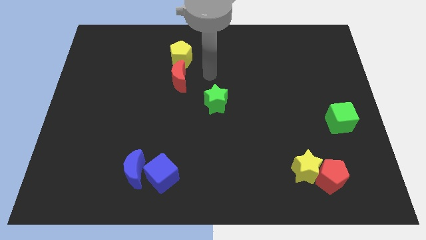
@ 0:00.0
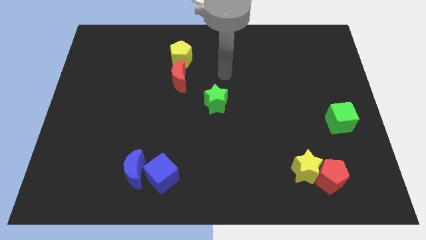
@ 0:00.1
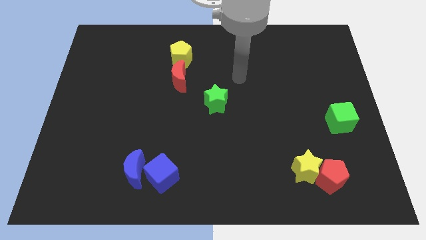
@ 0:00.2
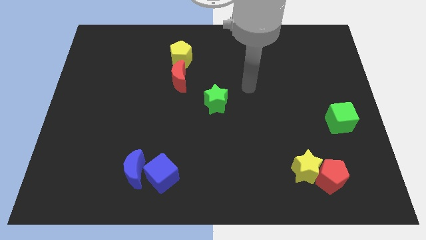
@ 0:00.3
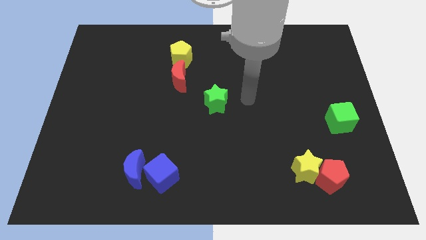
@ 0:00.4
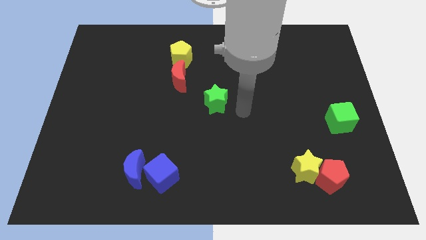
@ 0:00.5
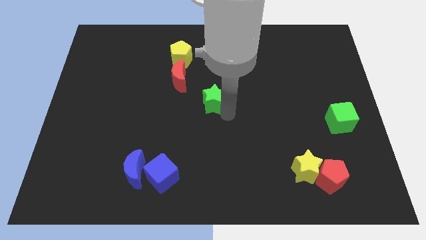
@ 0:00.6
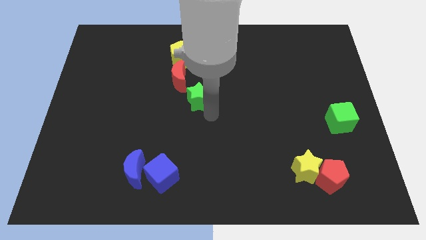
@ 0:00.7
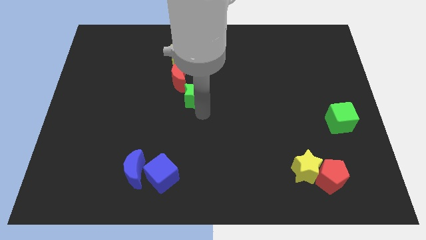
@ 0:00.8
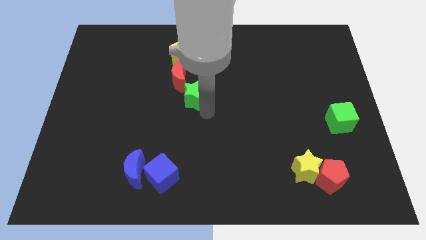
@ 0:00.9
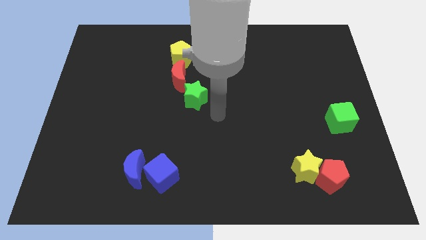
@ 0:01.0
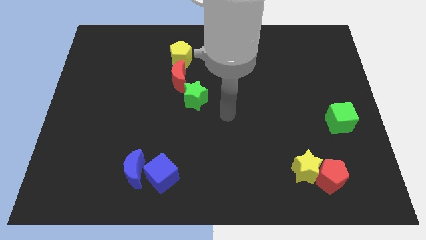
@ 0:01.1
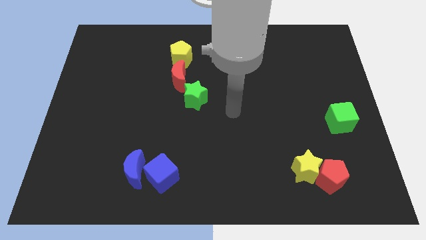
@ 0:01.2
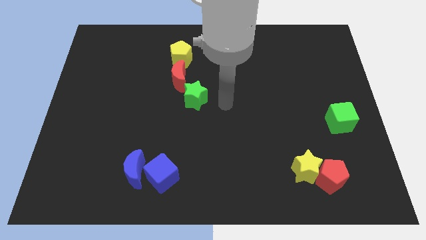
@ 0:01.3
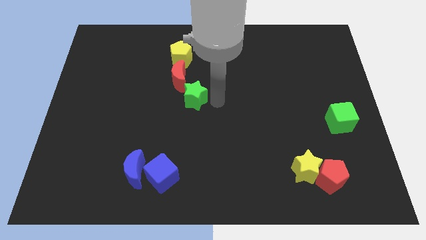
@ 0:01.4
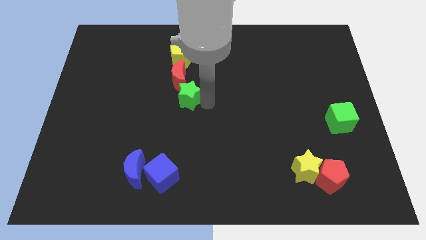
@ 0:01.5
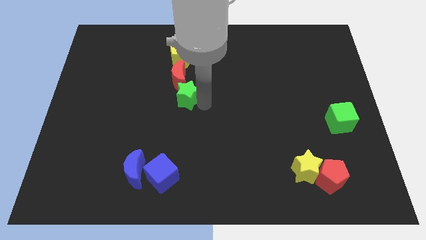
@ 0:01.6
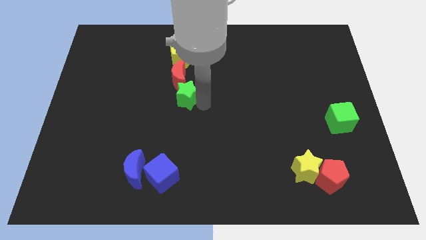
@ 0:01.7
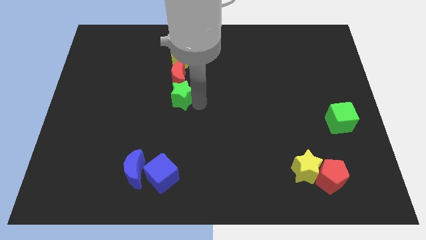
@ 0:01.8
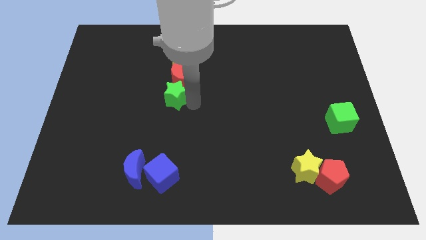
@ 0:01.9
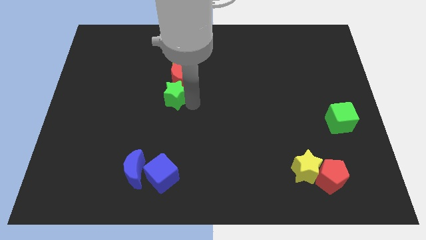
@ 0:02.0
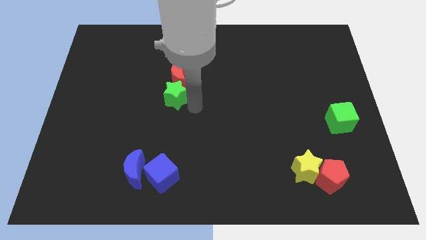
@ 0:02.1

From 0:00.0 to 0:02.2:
place the green star below red moon

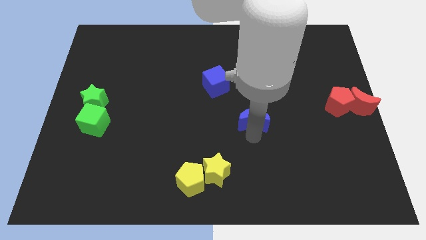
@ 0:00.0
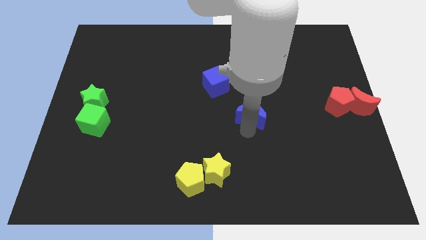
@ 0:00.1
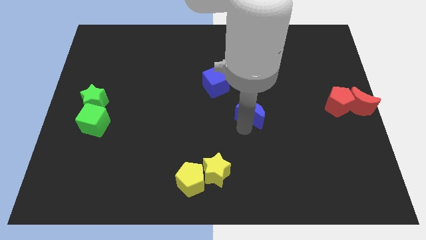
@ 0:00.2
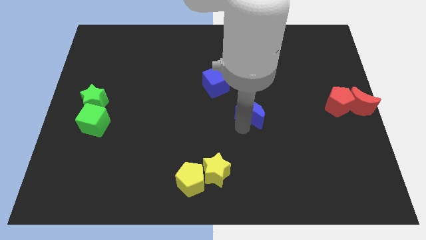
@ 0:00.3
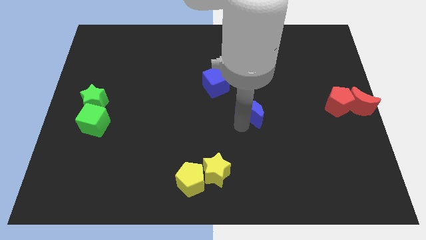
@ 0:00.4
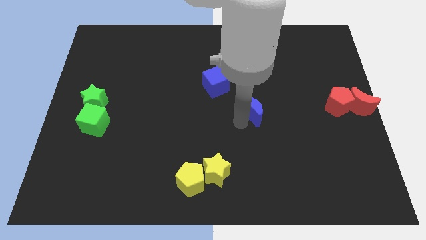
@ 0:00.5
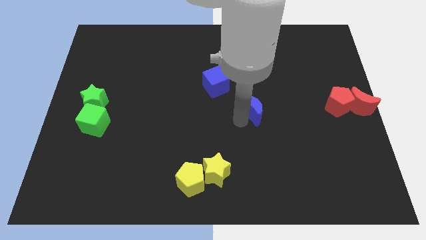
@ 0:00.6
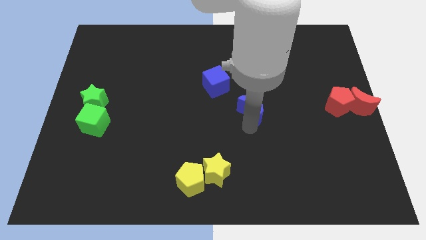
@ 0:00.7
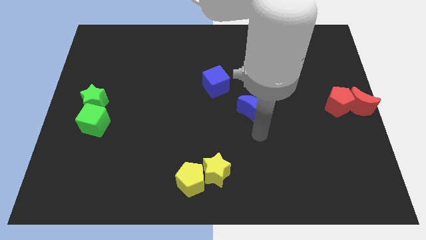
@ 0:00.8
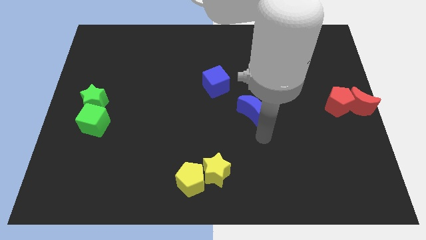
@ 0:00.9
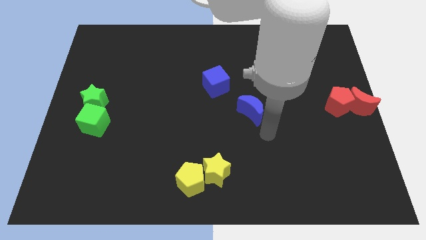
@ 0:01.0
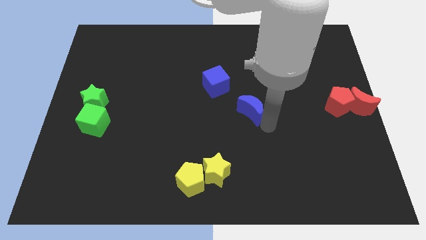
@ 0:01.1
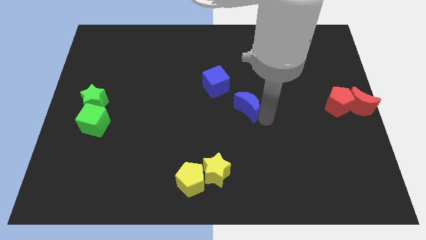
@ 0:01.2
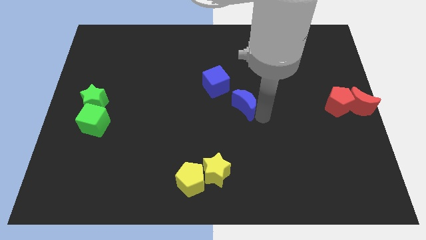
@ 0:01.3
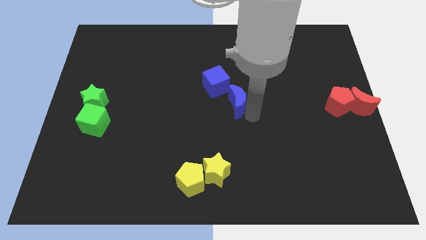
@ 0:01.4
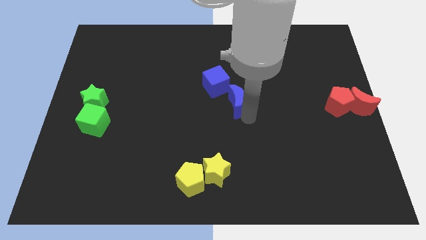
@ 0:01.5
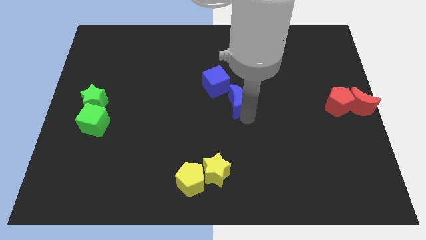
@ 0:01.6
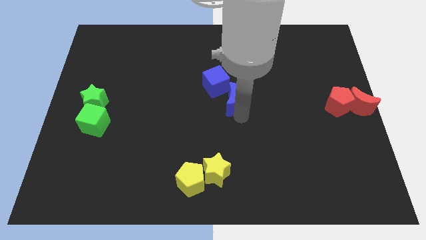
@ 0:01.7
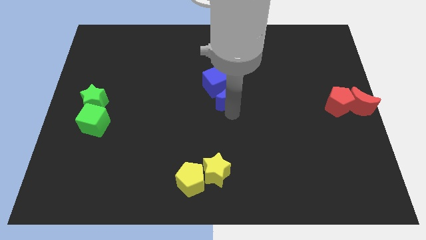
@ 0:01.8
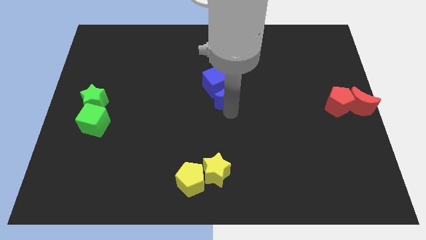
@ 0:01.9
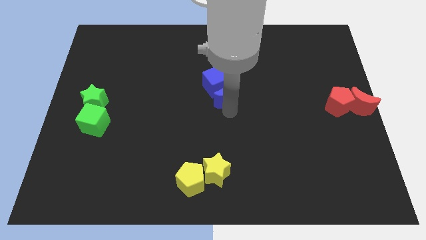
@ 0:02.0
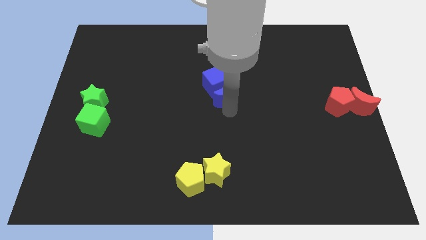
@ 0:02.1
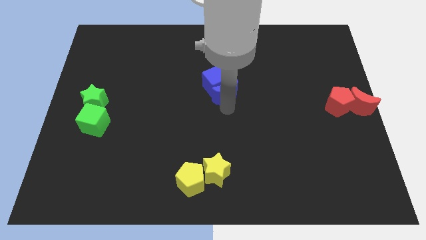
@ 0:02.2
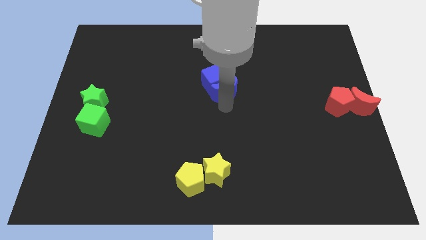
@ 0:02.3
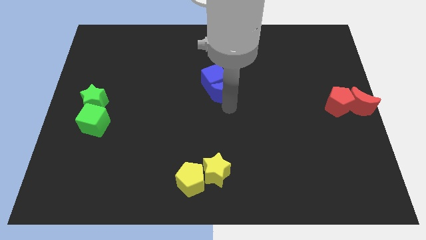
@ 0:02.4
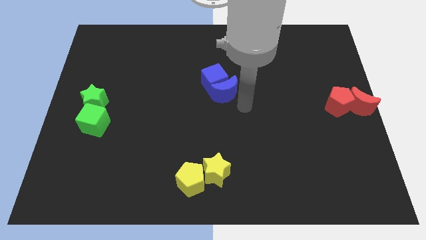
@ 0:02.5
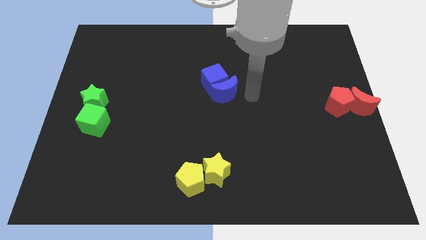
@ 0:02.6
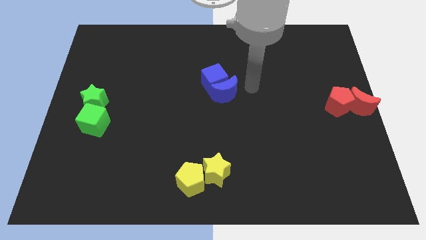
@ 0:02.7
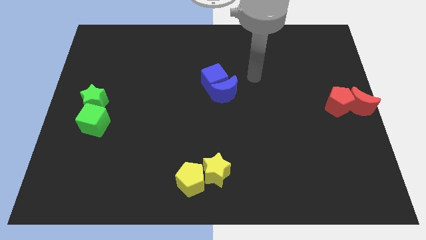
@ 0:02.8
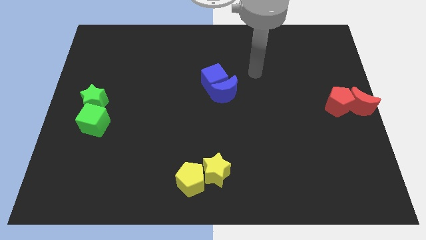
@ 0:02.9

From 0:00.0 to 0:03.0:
take the blue crescent into the blue cube

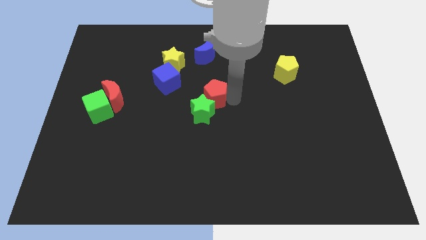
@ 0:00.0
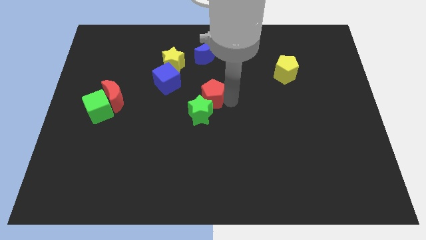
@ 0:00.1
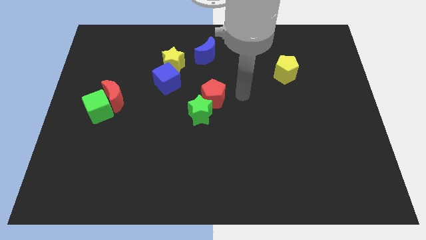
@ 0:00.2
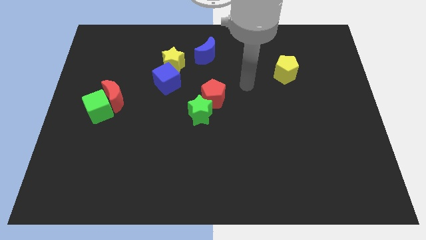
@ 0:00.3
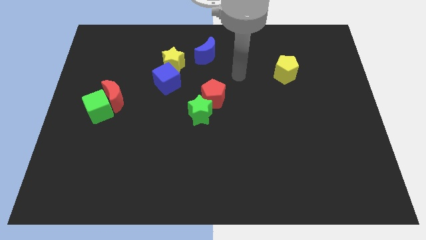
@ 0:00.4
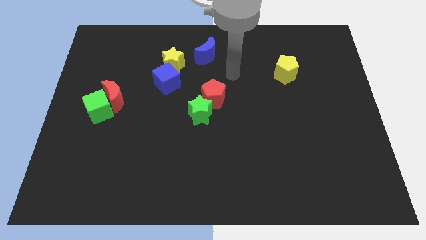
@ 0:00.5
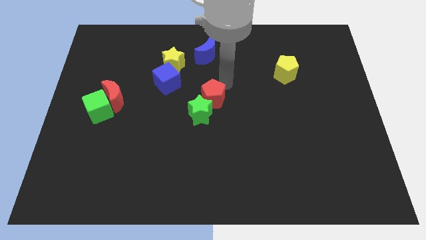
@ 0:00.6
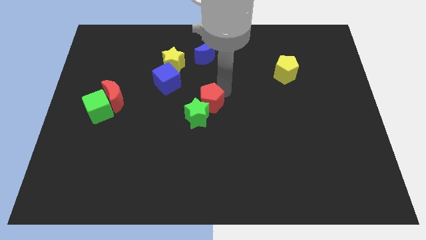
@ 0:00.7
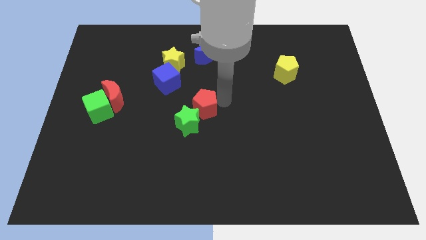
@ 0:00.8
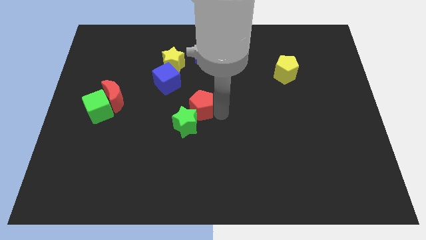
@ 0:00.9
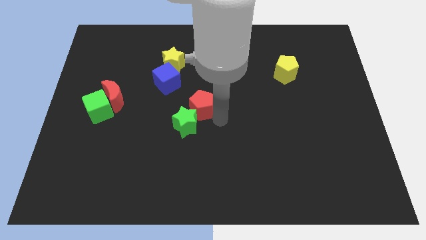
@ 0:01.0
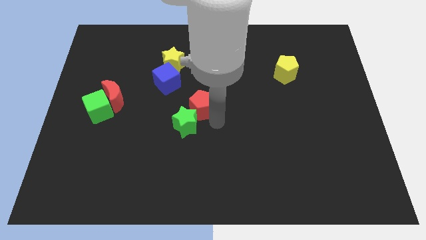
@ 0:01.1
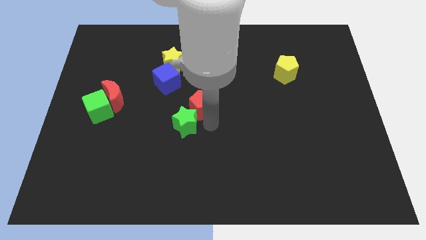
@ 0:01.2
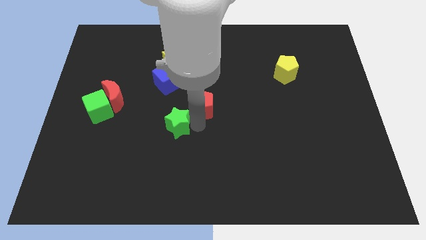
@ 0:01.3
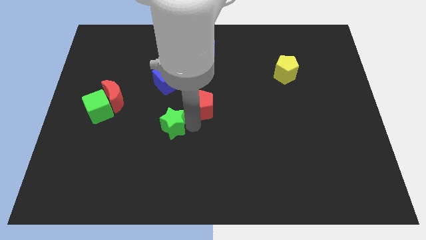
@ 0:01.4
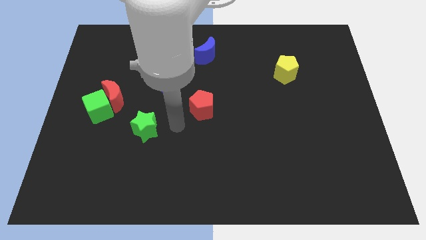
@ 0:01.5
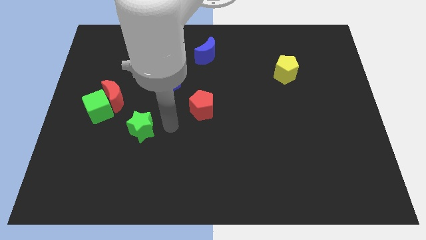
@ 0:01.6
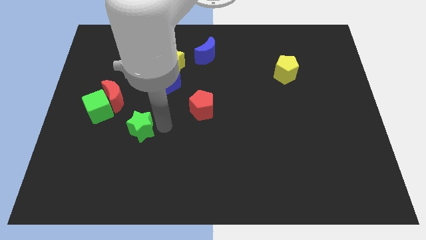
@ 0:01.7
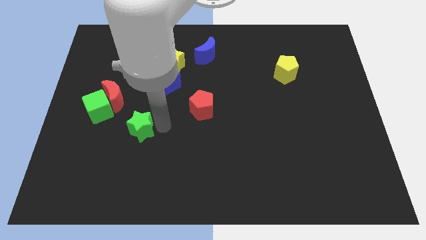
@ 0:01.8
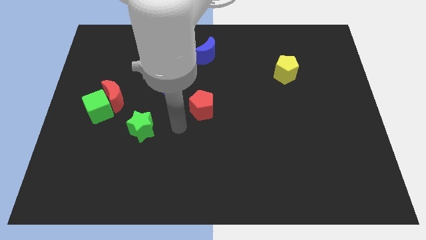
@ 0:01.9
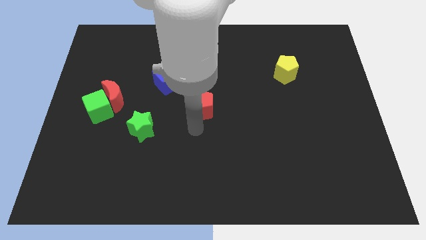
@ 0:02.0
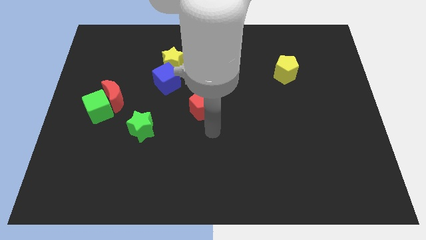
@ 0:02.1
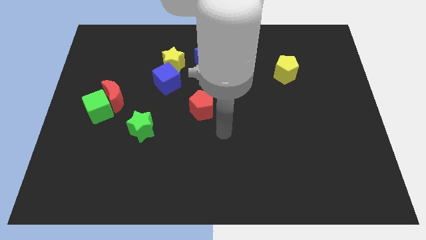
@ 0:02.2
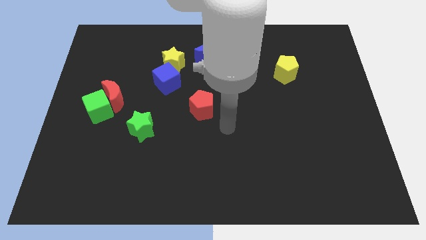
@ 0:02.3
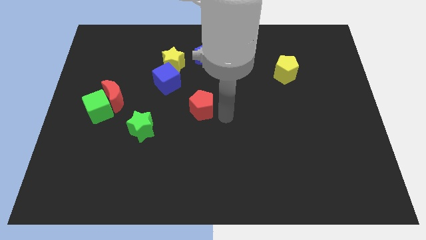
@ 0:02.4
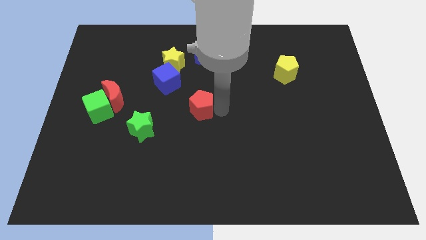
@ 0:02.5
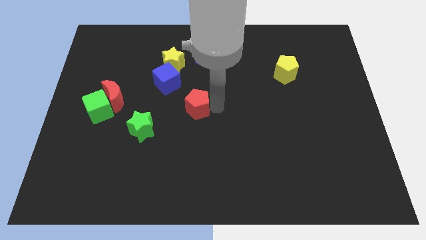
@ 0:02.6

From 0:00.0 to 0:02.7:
place the green star below the red moon

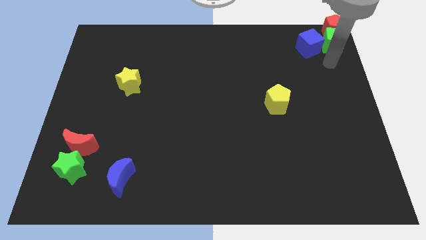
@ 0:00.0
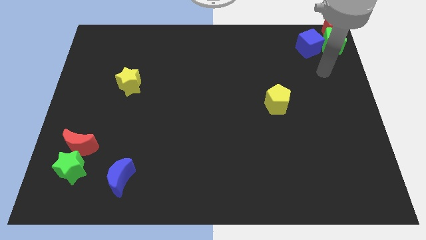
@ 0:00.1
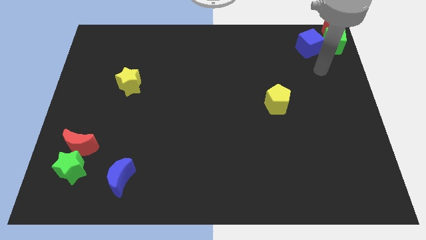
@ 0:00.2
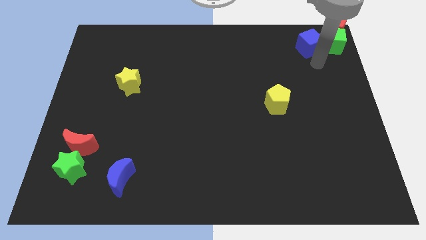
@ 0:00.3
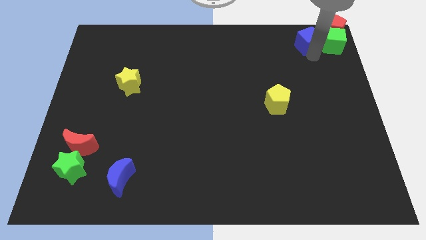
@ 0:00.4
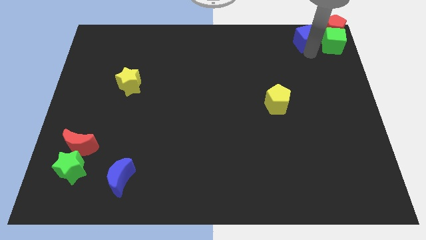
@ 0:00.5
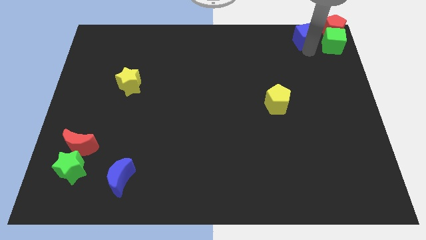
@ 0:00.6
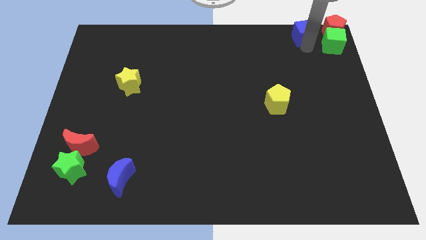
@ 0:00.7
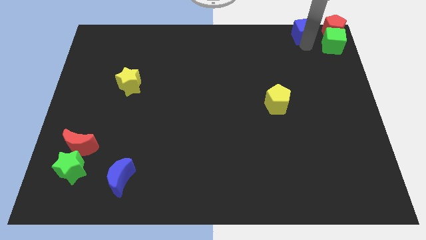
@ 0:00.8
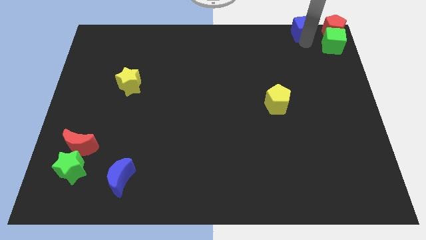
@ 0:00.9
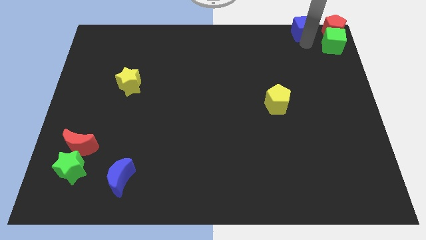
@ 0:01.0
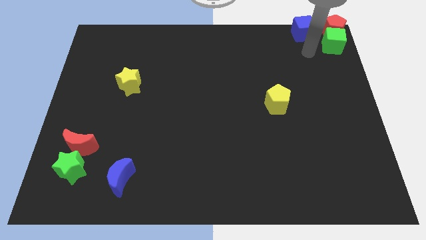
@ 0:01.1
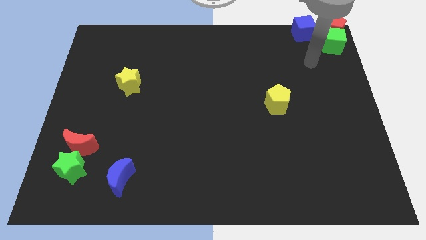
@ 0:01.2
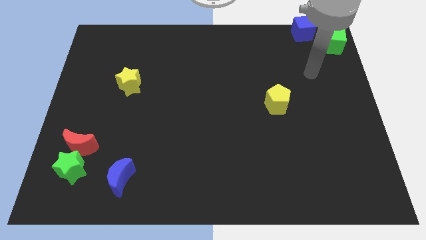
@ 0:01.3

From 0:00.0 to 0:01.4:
place blue cube to the left of the red pentagon
